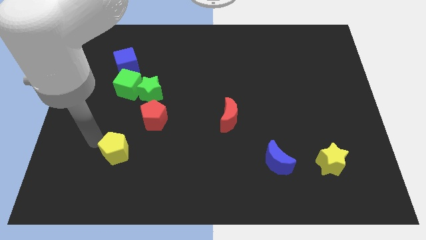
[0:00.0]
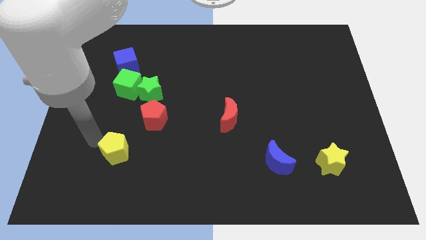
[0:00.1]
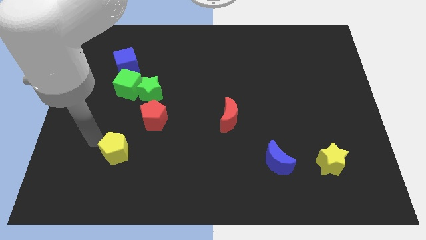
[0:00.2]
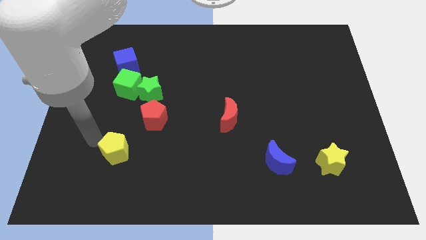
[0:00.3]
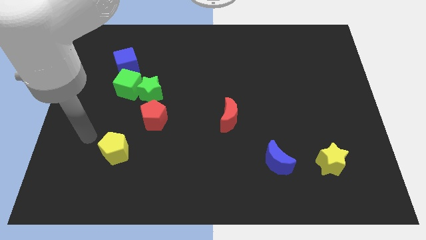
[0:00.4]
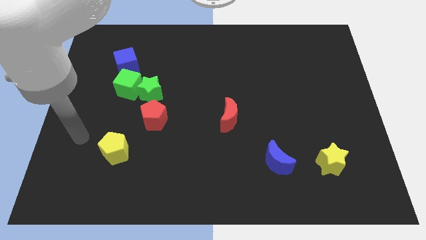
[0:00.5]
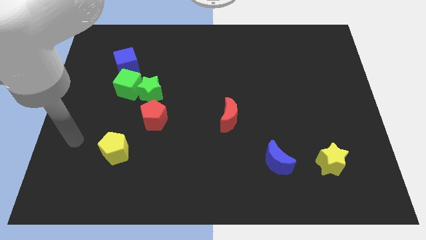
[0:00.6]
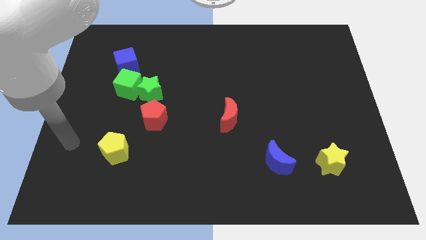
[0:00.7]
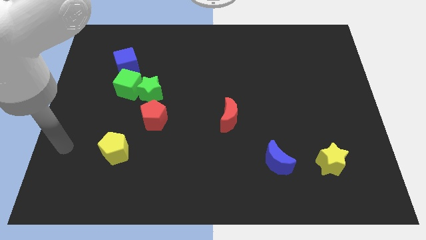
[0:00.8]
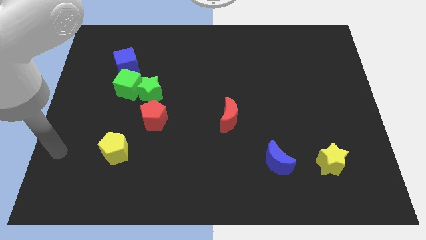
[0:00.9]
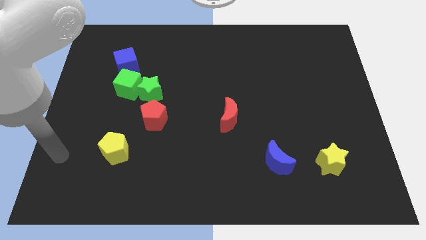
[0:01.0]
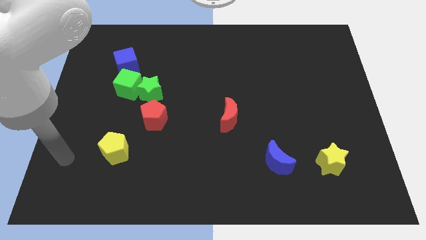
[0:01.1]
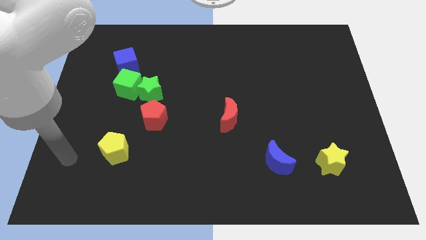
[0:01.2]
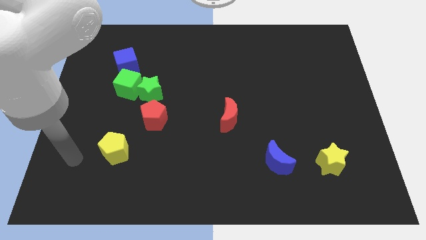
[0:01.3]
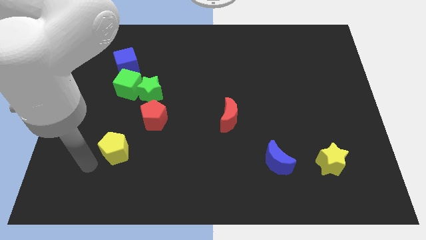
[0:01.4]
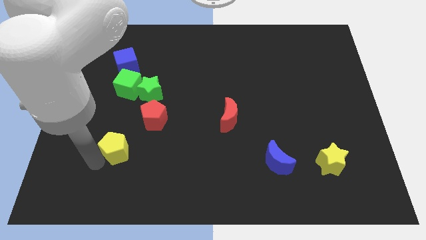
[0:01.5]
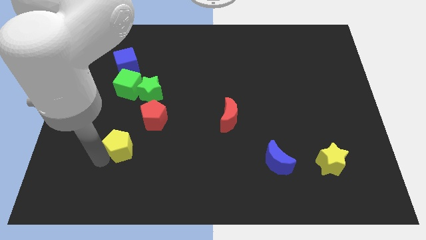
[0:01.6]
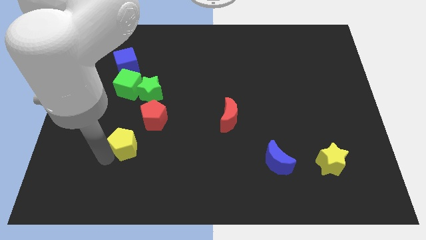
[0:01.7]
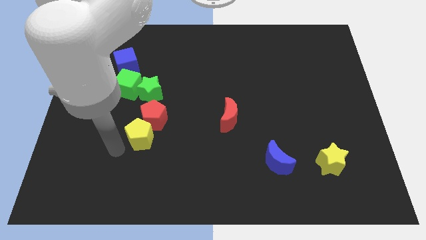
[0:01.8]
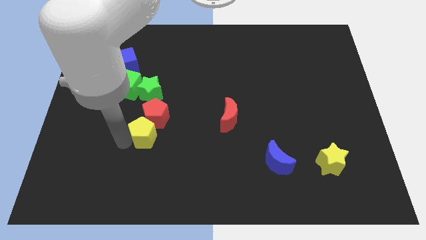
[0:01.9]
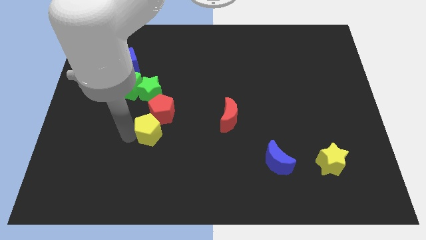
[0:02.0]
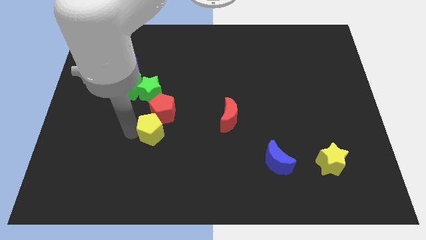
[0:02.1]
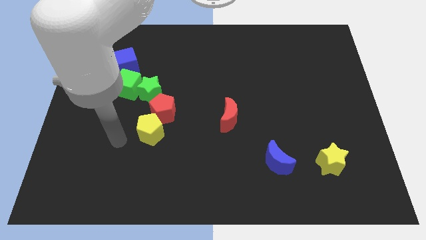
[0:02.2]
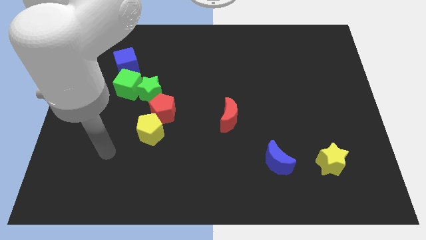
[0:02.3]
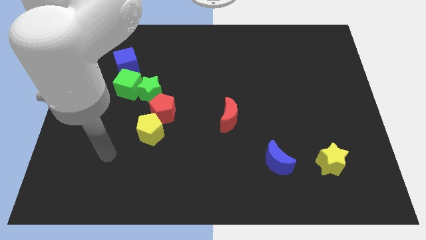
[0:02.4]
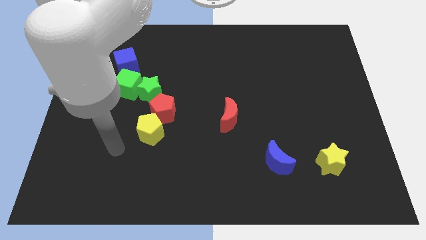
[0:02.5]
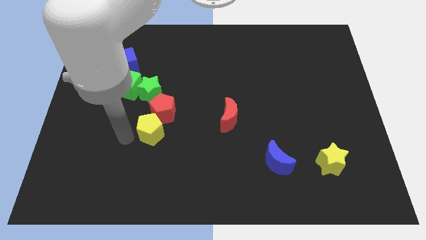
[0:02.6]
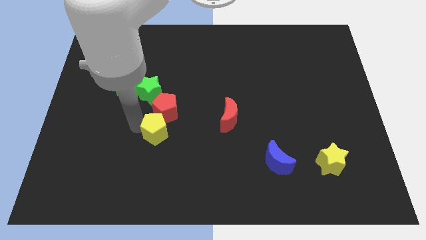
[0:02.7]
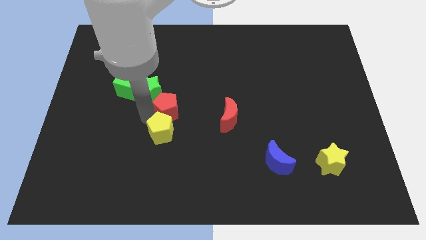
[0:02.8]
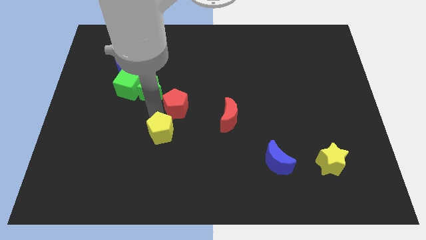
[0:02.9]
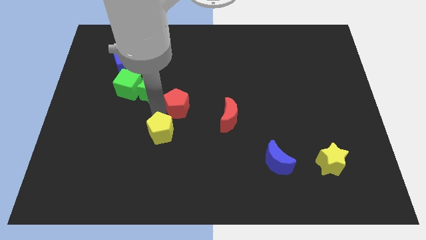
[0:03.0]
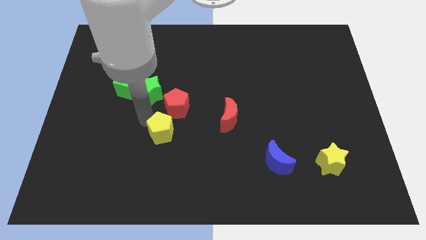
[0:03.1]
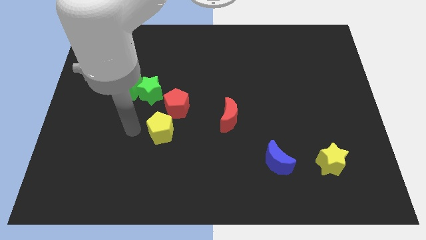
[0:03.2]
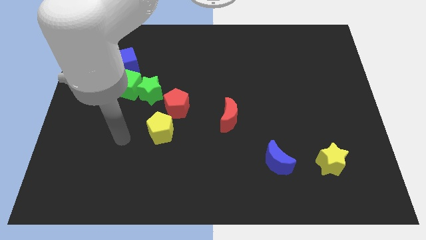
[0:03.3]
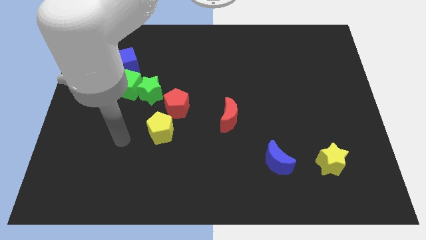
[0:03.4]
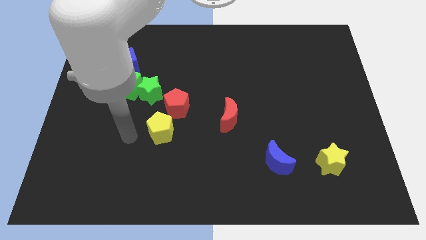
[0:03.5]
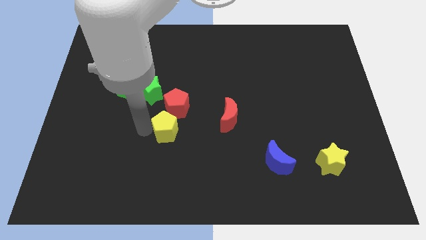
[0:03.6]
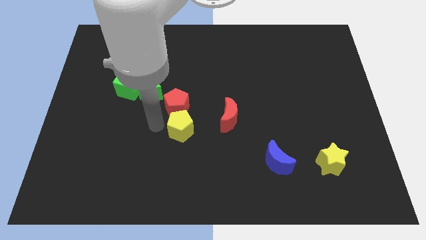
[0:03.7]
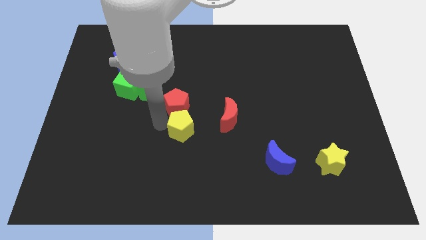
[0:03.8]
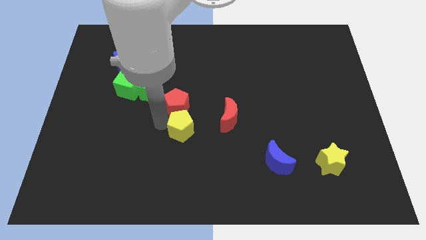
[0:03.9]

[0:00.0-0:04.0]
place yellow pentagon below red pentagon

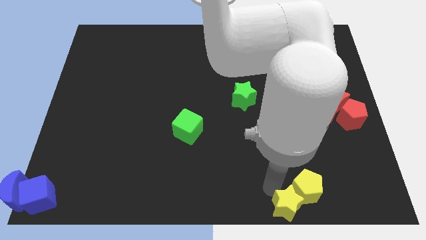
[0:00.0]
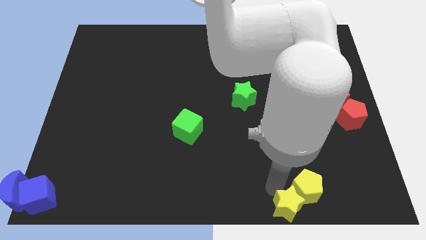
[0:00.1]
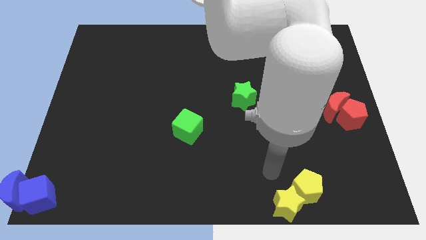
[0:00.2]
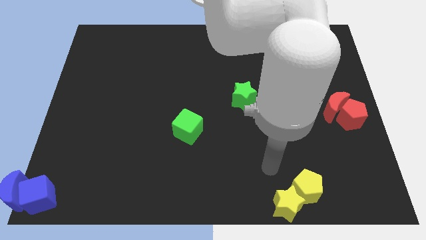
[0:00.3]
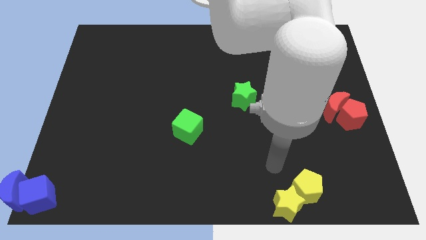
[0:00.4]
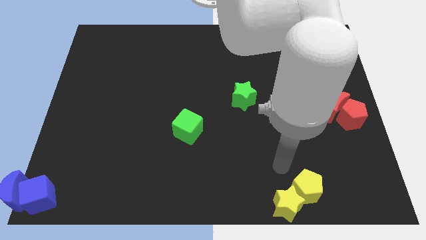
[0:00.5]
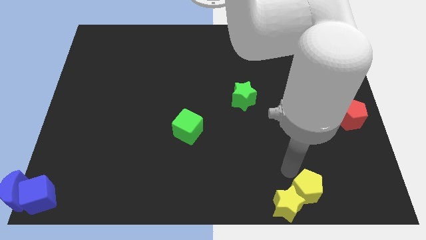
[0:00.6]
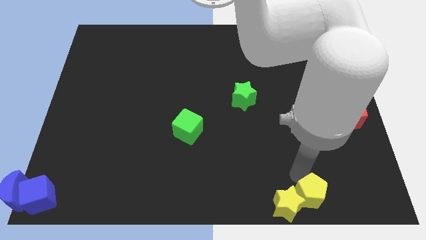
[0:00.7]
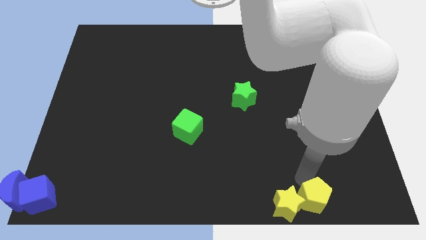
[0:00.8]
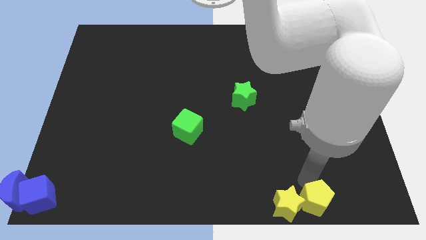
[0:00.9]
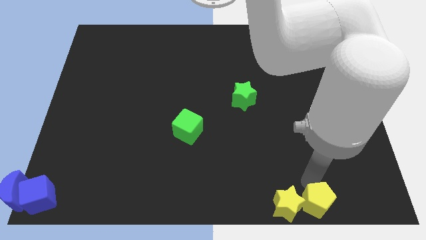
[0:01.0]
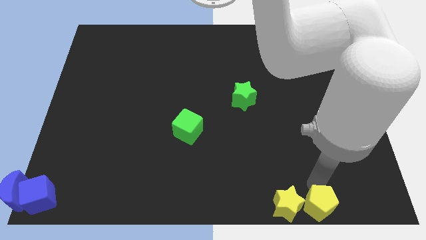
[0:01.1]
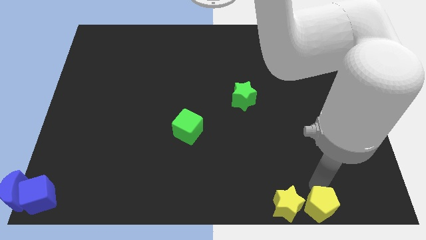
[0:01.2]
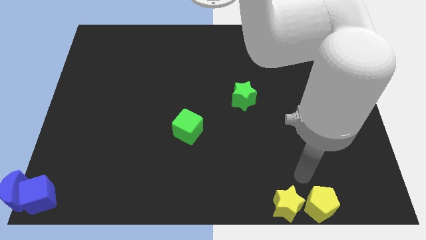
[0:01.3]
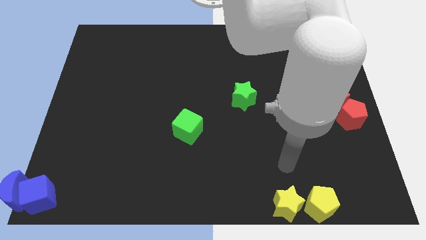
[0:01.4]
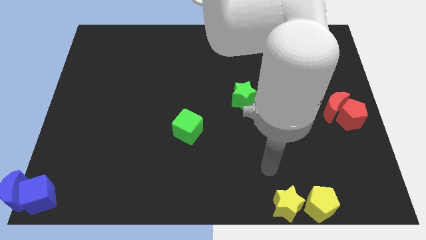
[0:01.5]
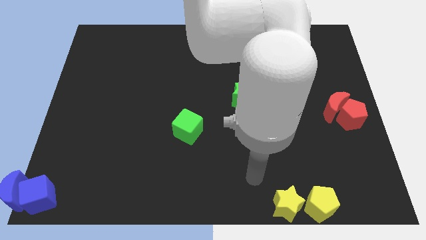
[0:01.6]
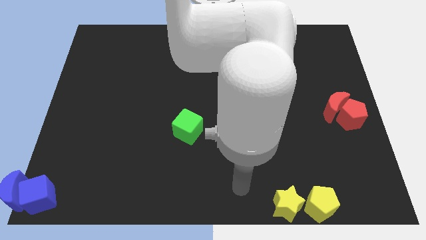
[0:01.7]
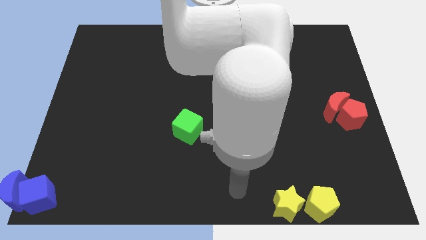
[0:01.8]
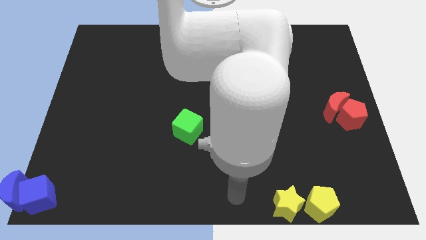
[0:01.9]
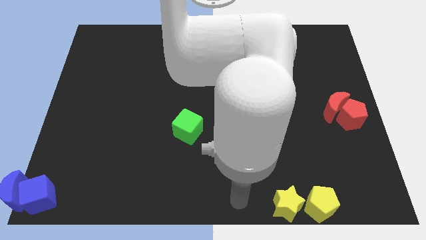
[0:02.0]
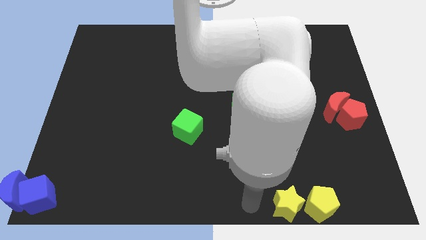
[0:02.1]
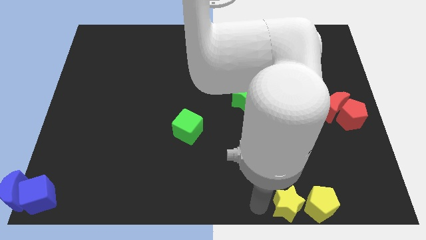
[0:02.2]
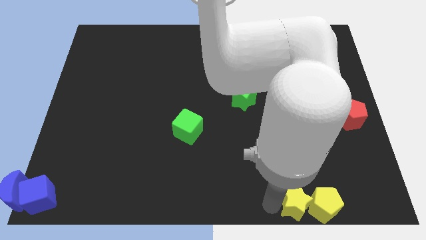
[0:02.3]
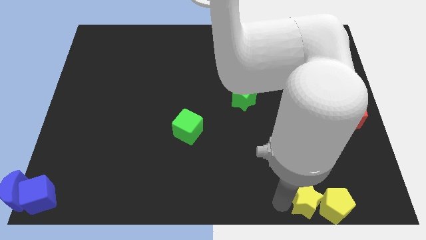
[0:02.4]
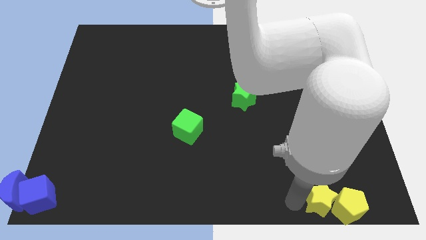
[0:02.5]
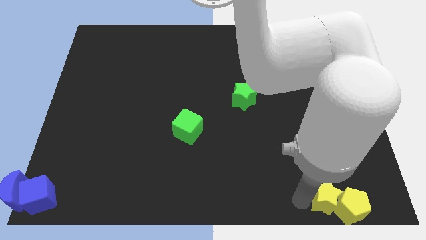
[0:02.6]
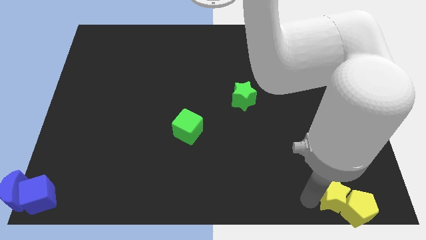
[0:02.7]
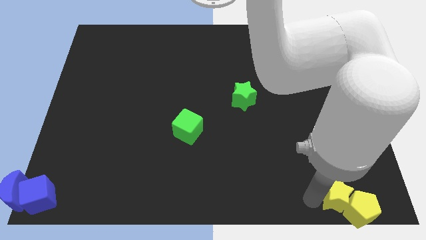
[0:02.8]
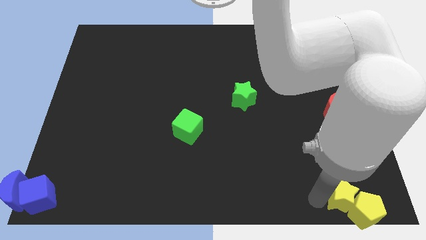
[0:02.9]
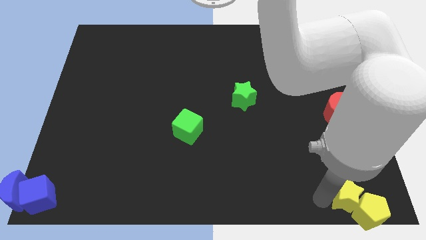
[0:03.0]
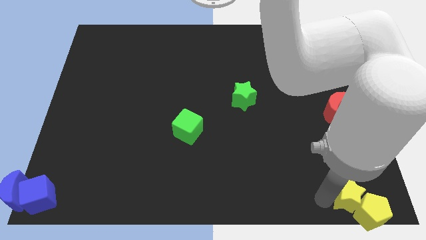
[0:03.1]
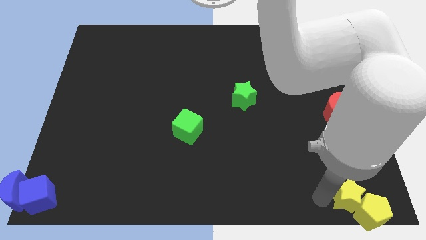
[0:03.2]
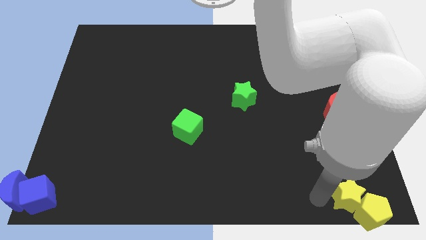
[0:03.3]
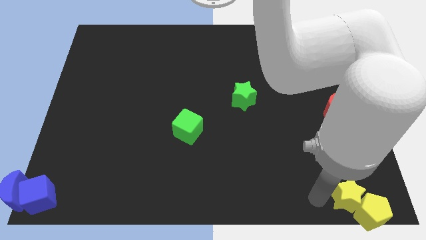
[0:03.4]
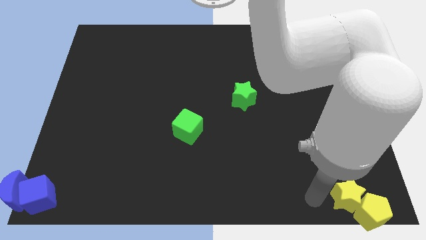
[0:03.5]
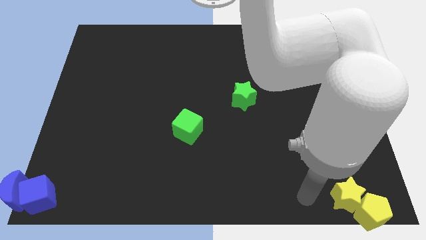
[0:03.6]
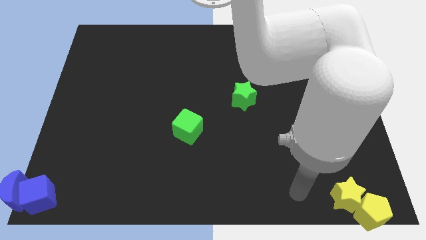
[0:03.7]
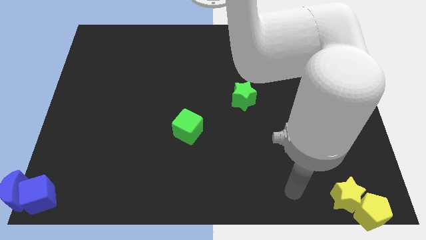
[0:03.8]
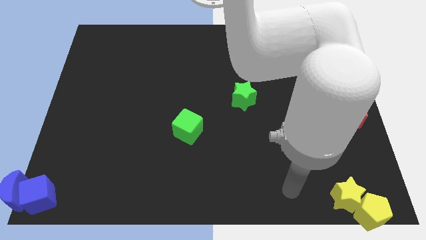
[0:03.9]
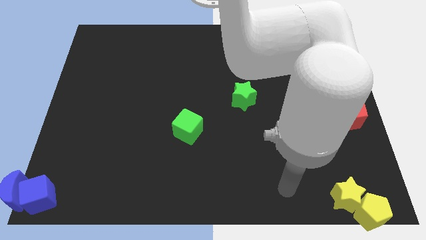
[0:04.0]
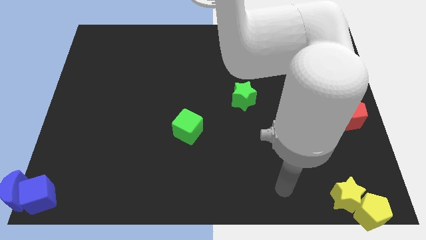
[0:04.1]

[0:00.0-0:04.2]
push the yellow blocks to the bottom of the red blocks

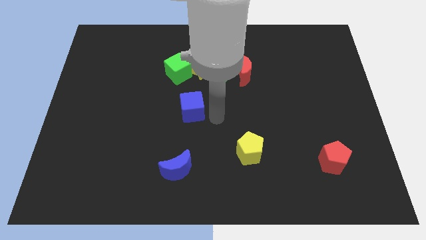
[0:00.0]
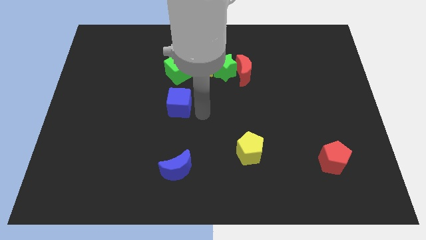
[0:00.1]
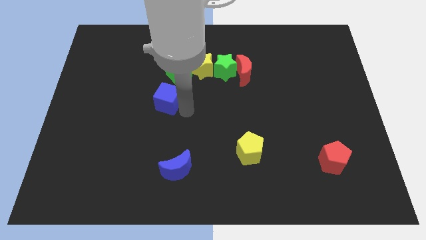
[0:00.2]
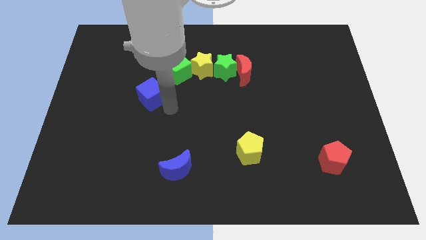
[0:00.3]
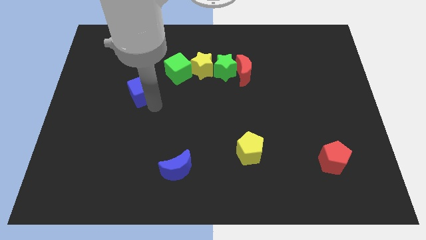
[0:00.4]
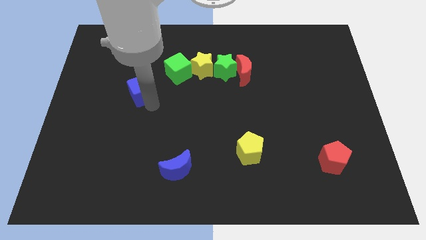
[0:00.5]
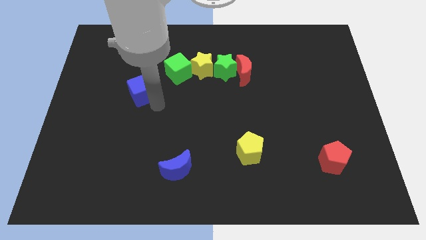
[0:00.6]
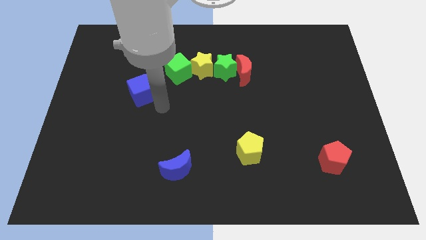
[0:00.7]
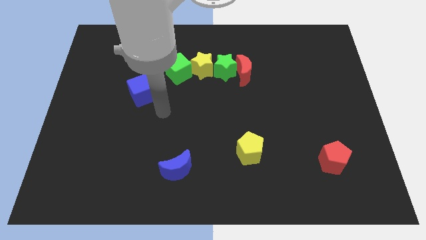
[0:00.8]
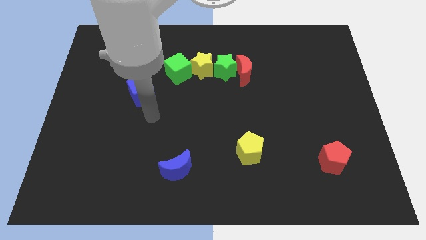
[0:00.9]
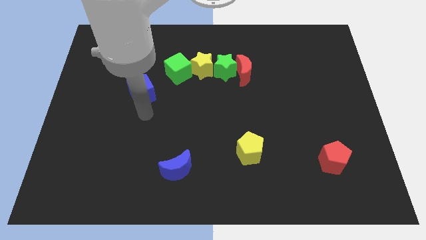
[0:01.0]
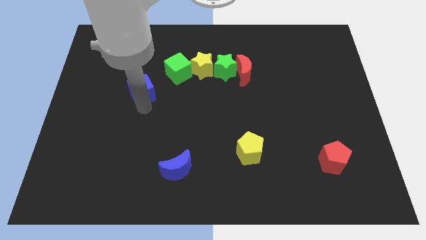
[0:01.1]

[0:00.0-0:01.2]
move the blue cube towards the top left of the board
